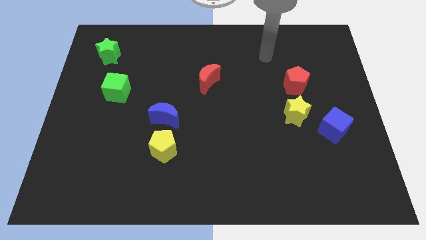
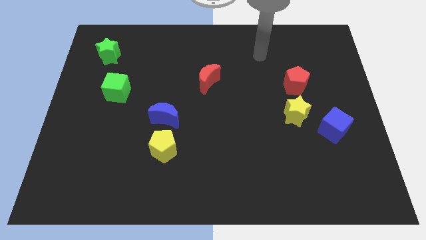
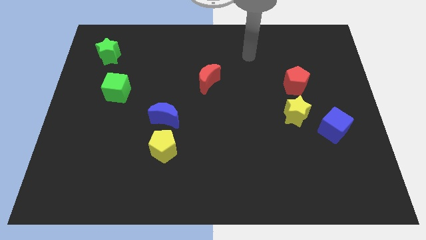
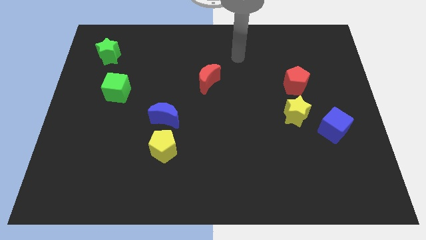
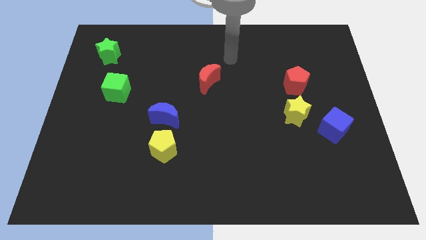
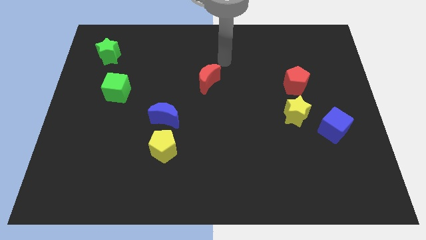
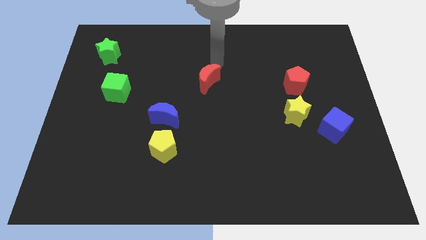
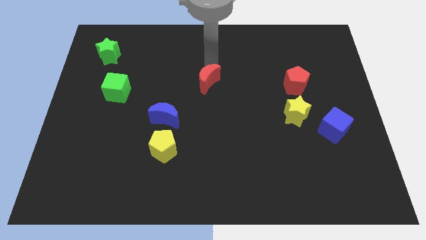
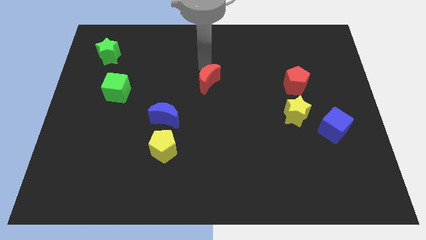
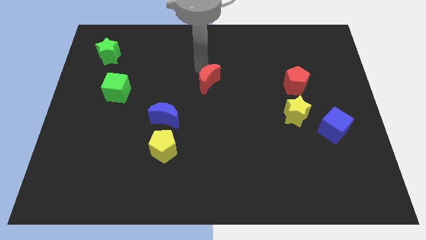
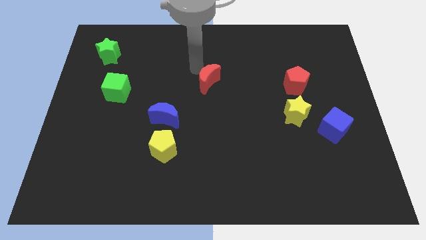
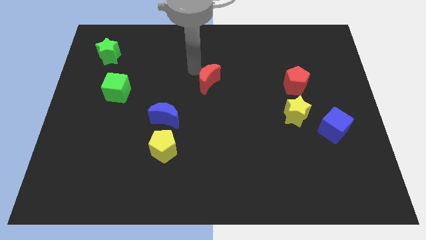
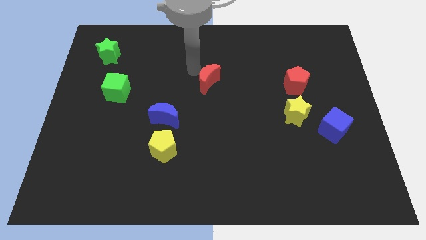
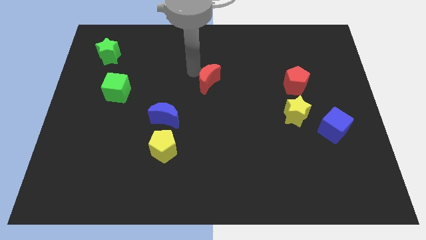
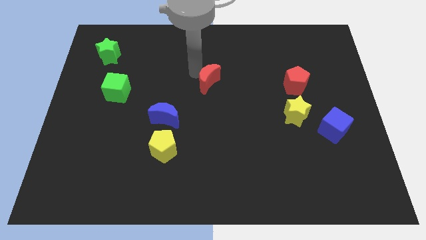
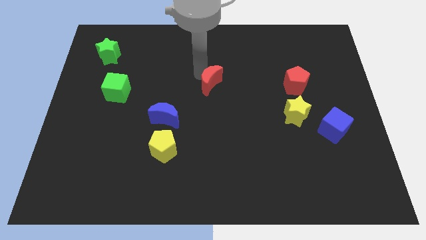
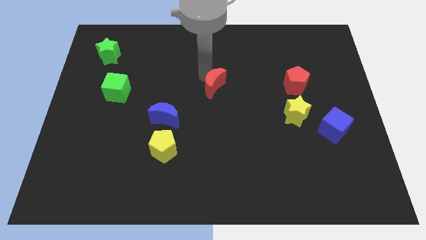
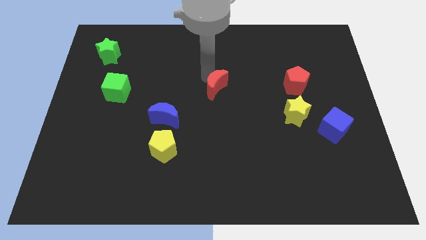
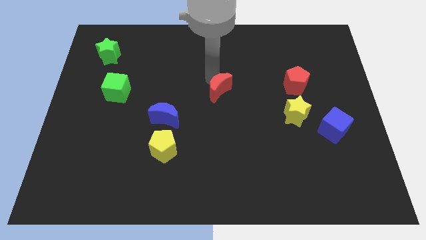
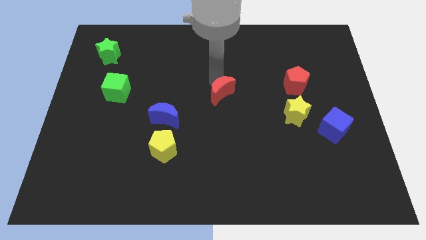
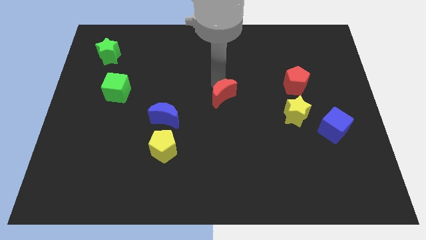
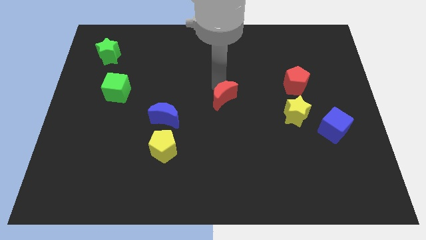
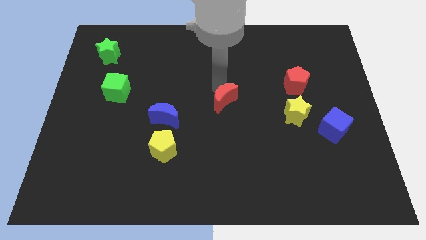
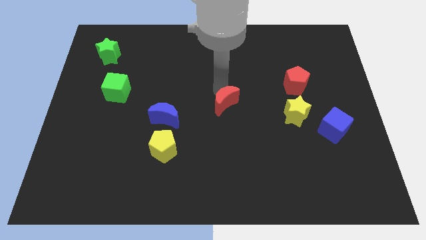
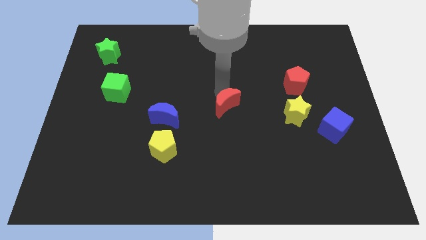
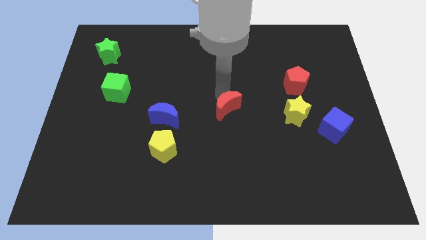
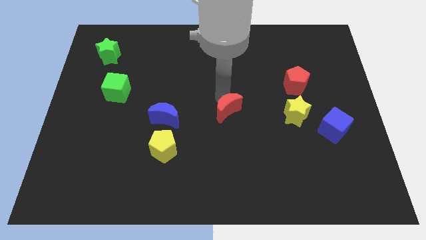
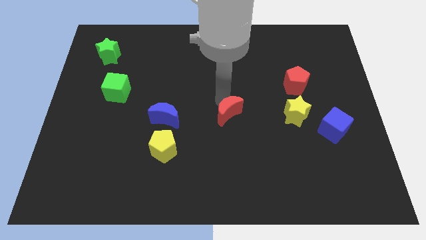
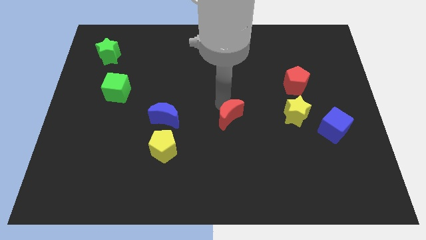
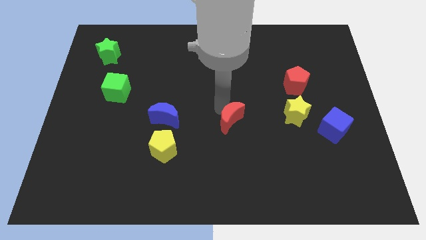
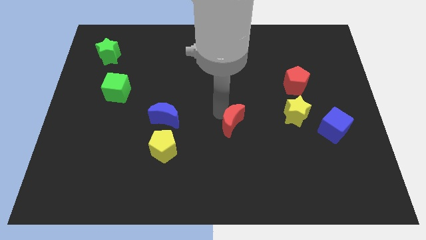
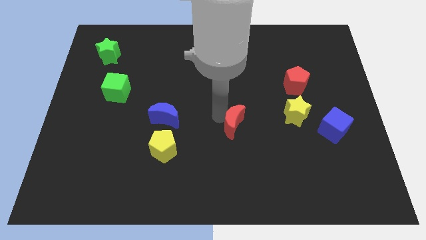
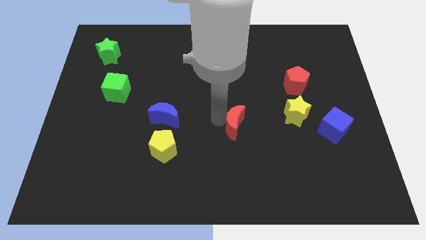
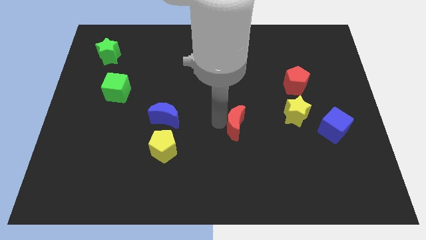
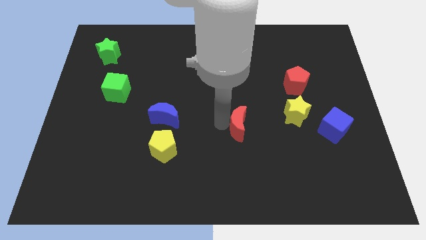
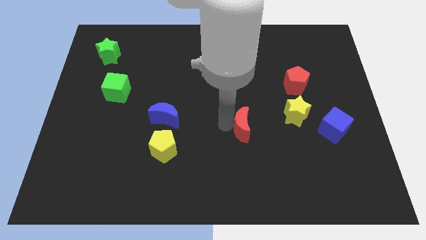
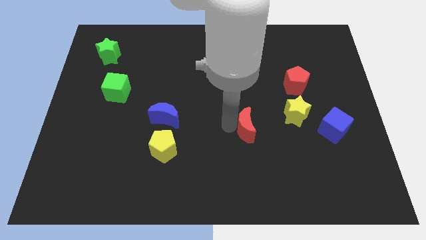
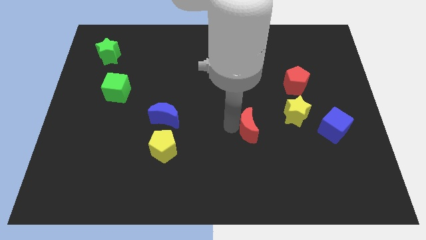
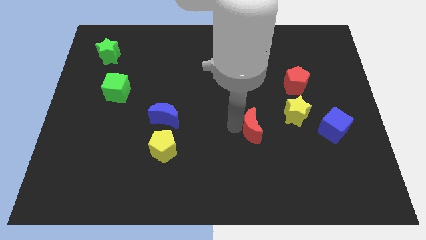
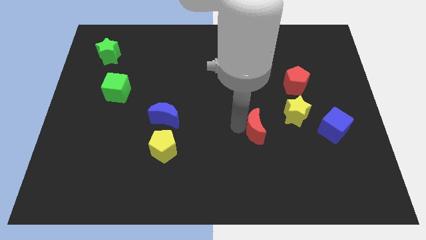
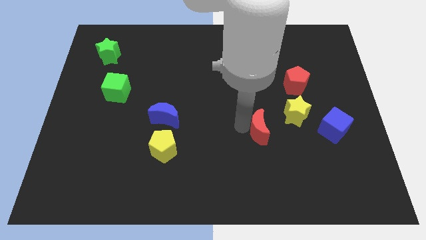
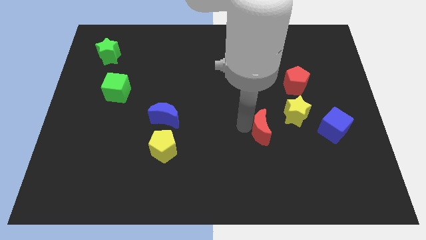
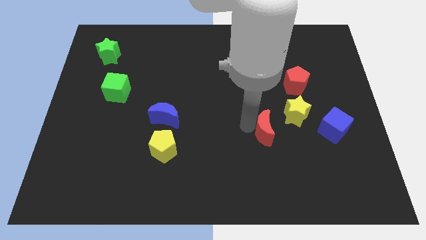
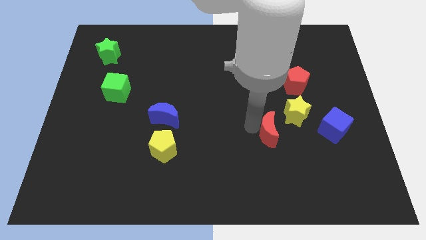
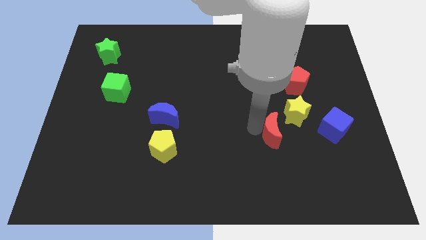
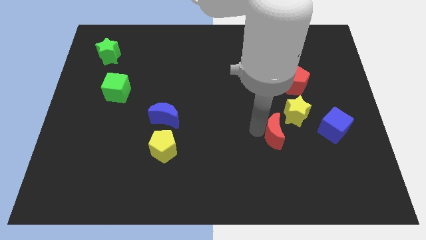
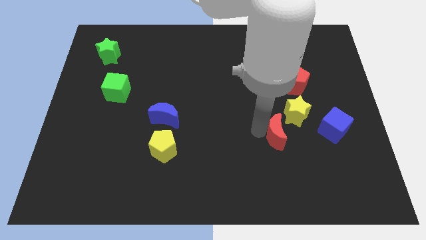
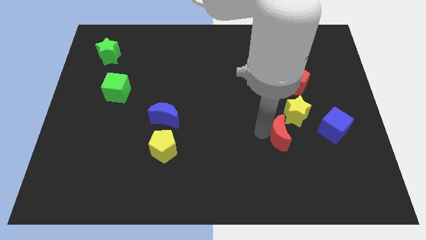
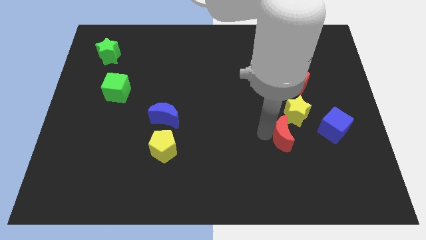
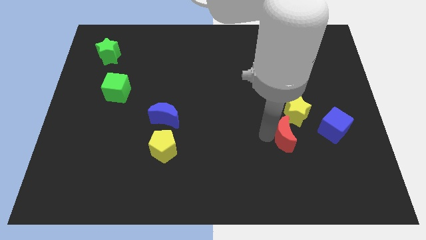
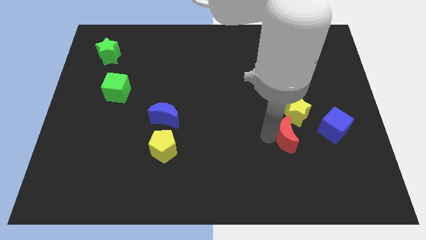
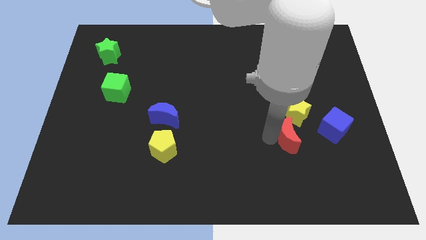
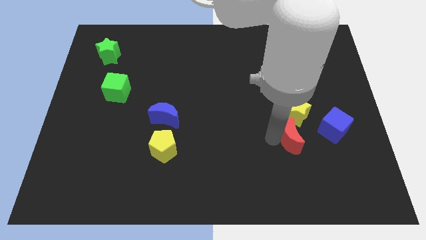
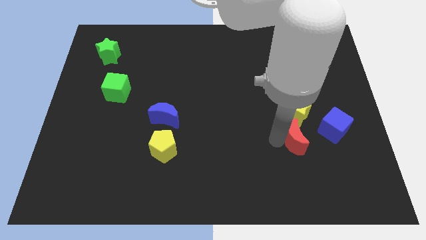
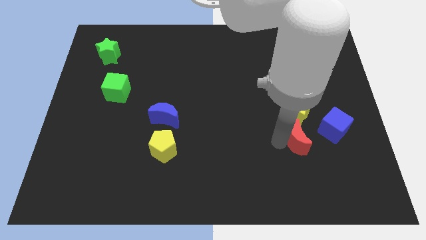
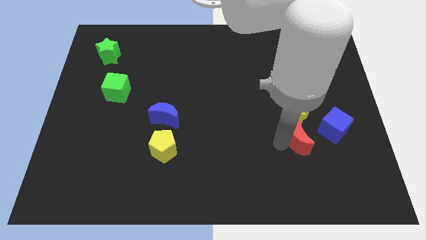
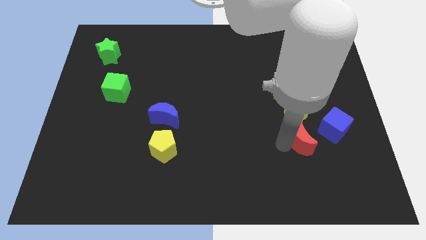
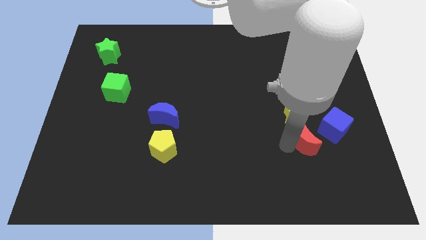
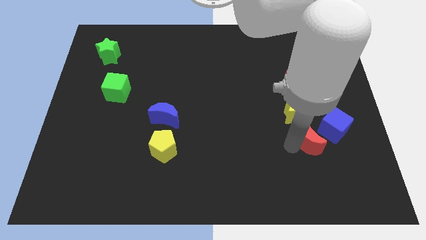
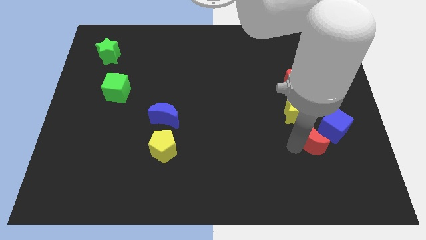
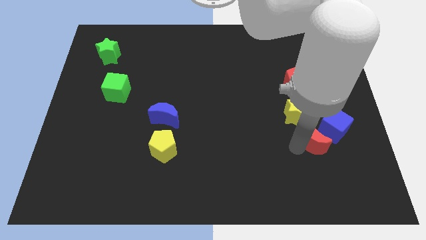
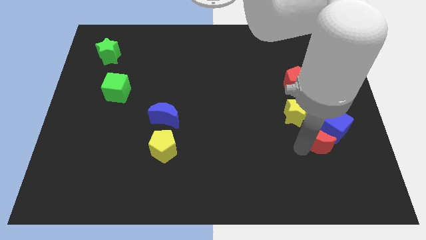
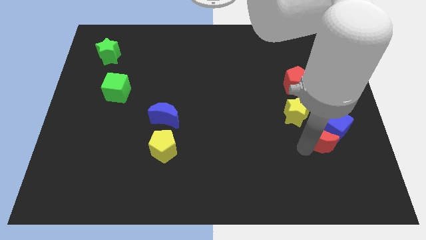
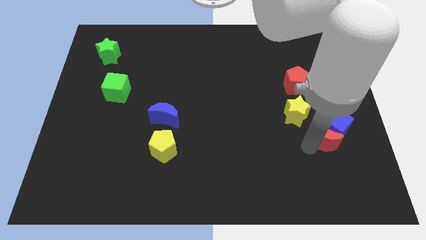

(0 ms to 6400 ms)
push the red moon next to the blue cube

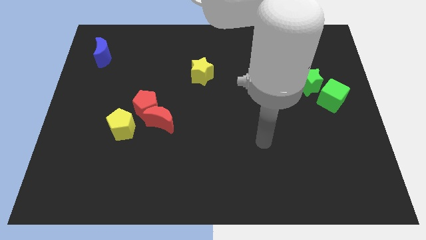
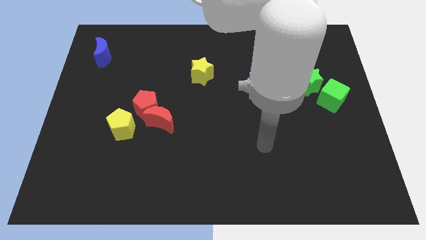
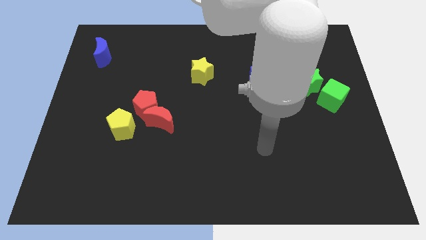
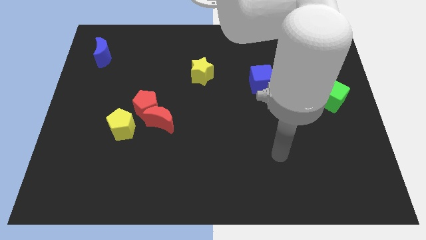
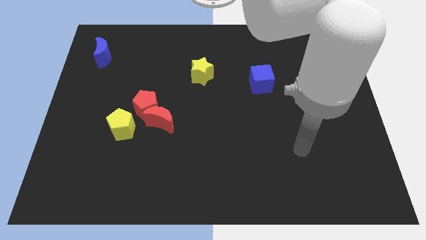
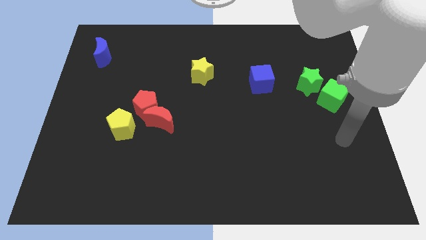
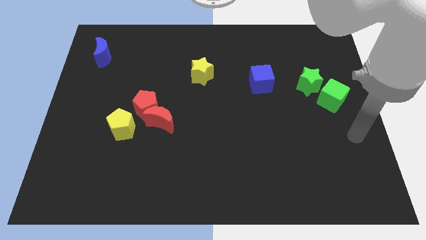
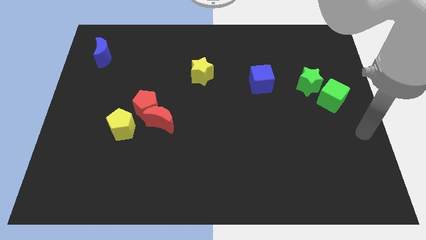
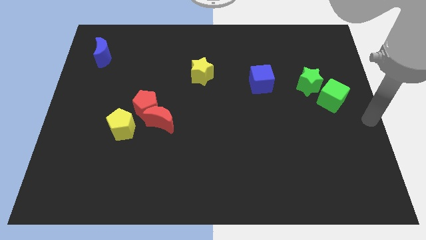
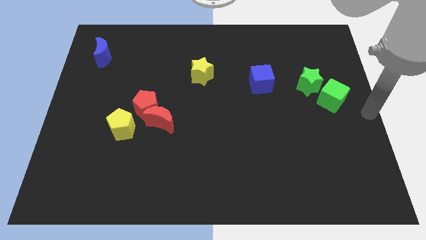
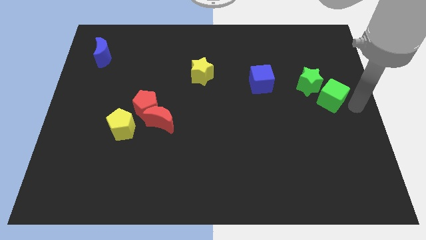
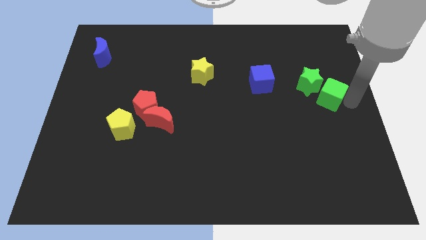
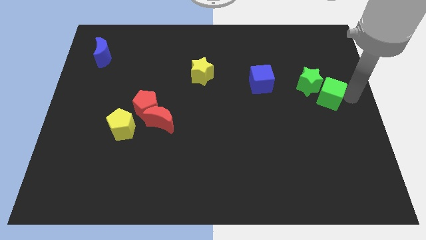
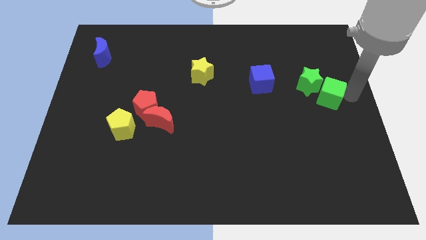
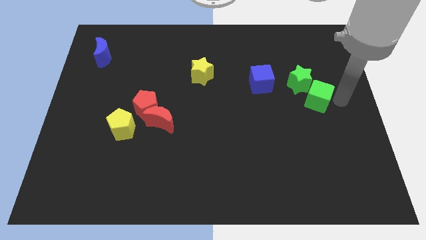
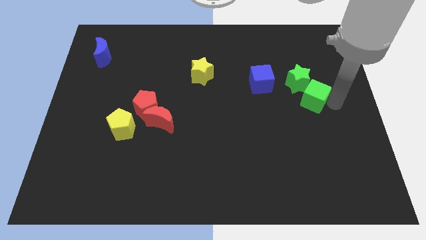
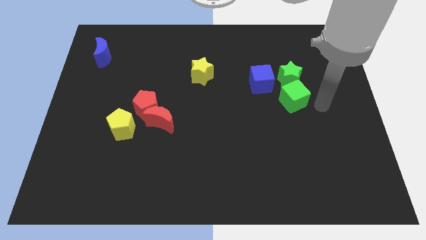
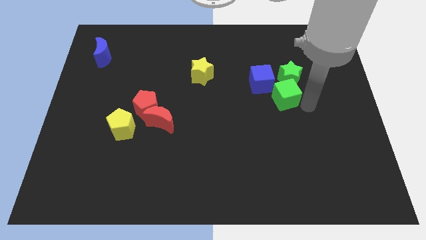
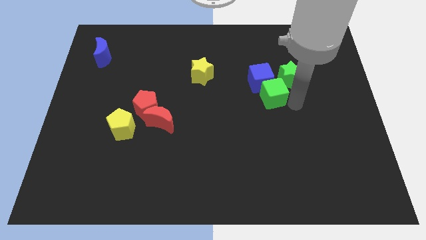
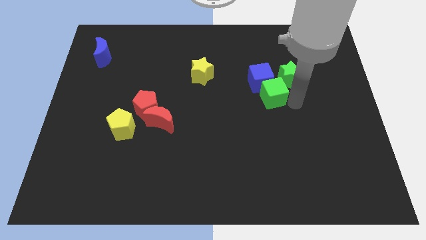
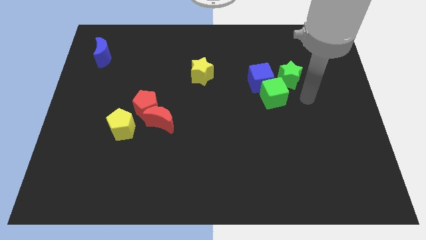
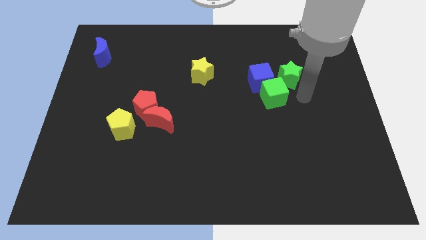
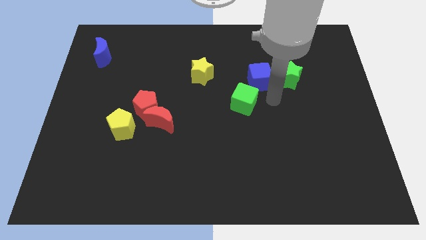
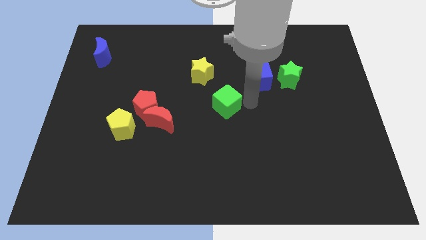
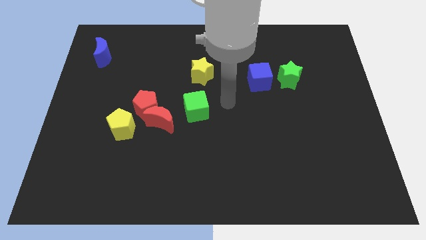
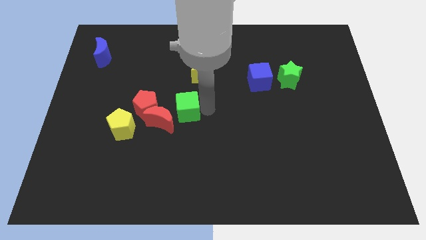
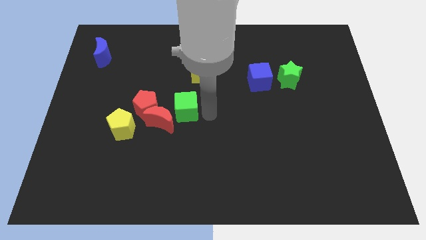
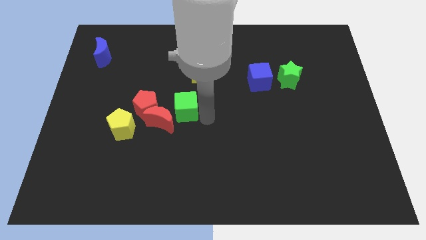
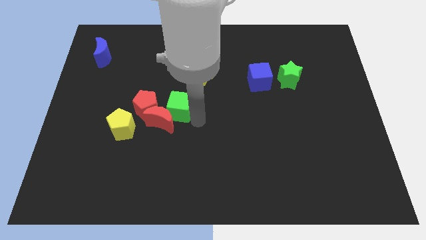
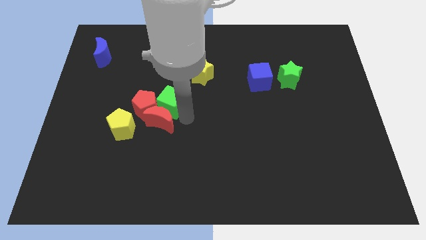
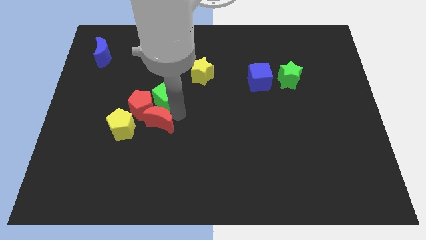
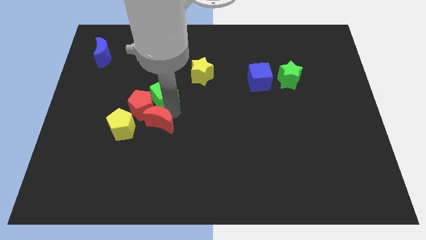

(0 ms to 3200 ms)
move the green cube towards the red pentagon
